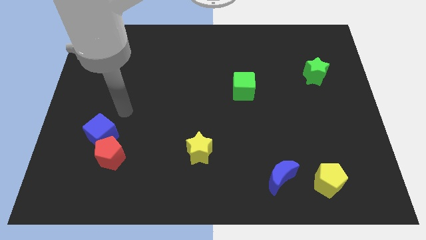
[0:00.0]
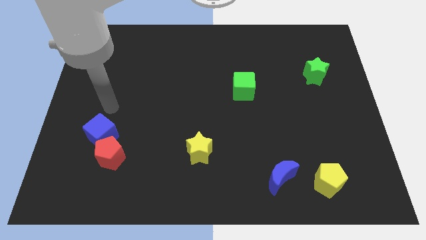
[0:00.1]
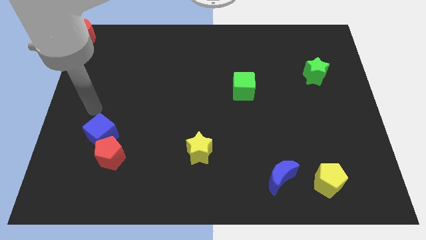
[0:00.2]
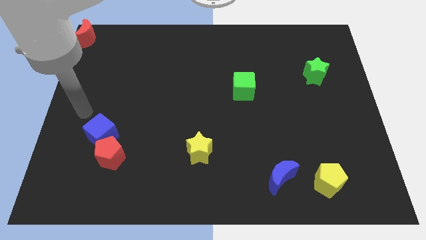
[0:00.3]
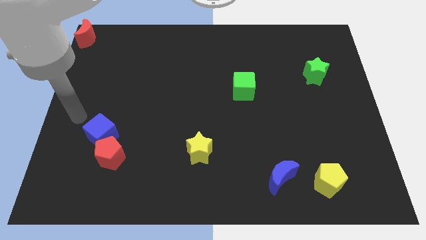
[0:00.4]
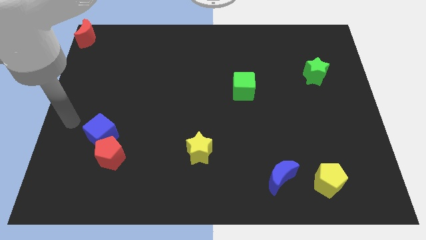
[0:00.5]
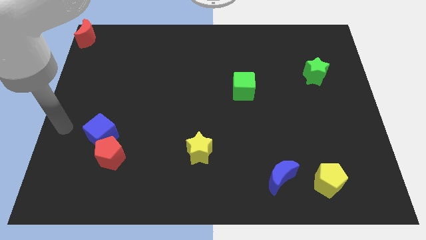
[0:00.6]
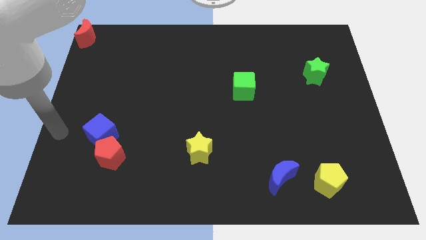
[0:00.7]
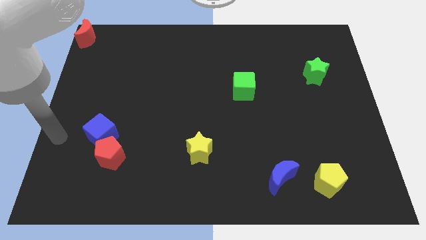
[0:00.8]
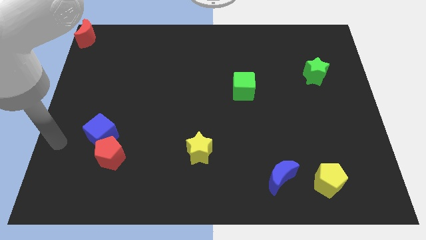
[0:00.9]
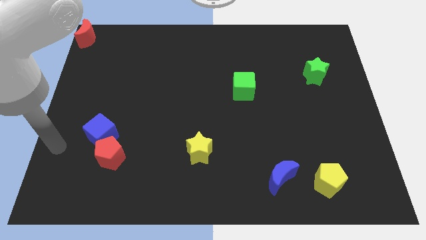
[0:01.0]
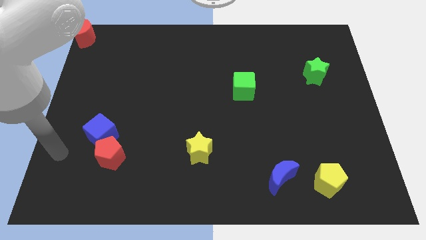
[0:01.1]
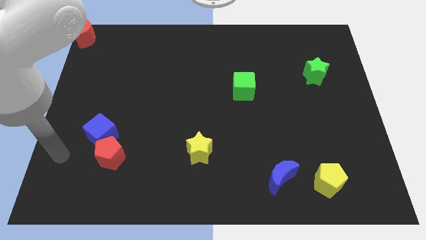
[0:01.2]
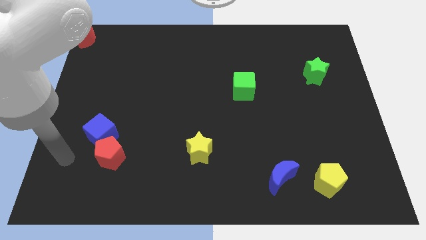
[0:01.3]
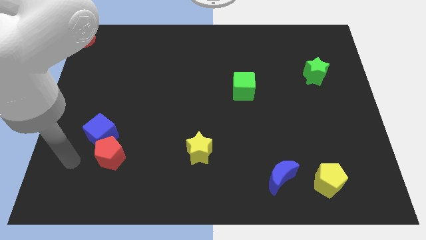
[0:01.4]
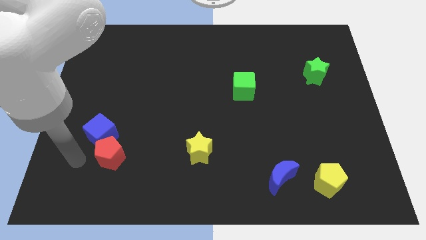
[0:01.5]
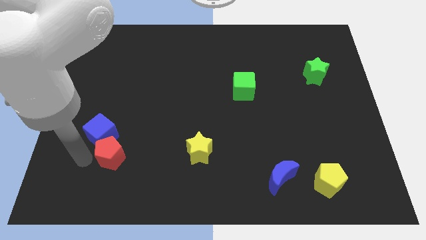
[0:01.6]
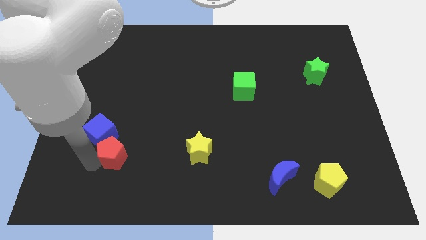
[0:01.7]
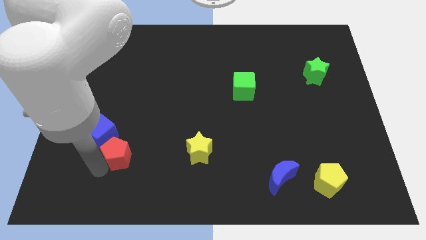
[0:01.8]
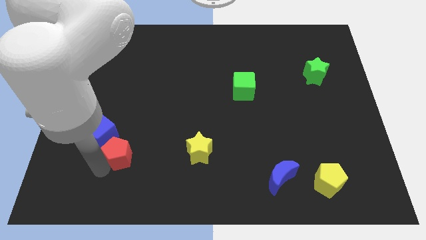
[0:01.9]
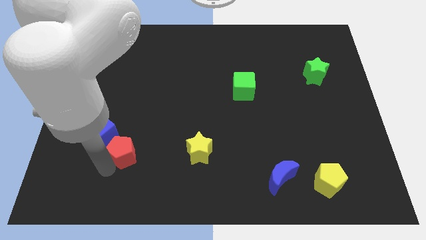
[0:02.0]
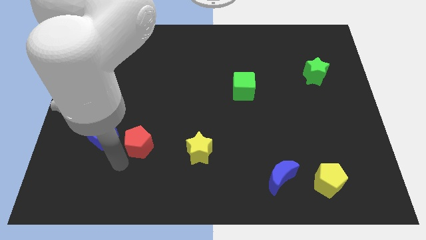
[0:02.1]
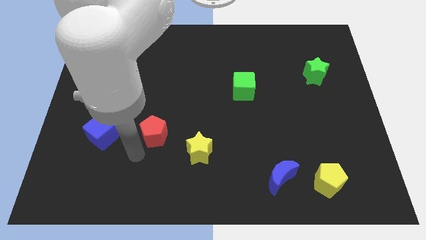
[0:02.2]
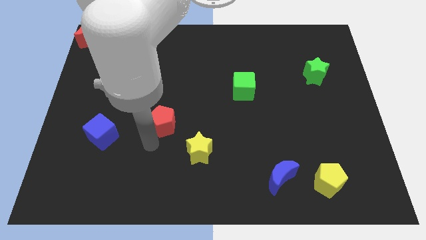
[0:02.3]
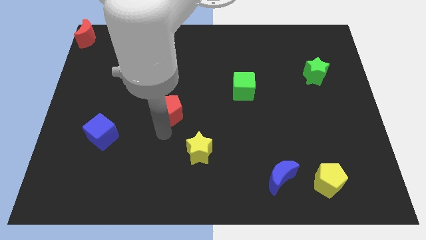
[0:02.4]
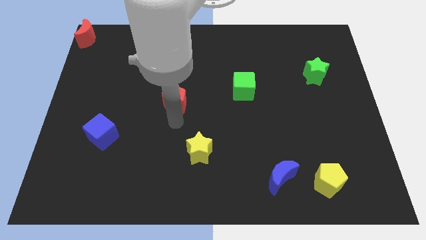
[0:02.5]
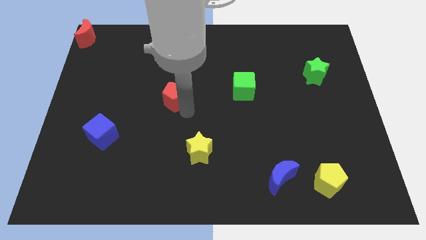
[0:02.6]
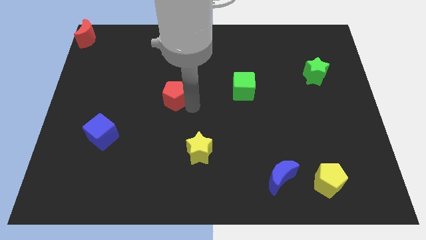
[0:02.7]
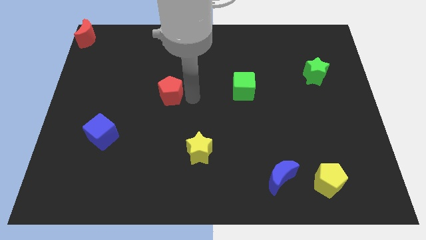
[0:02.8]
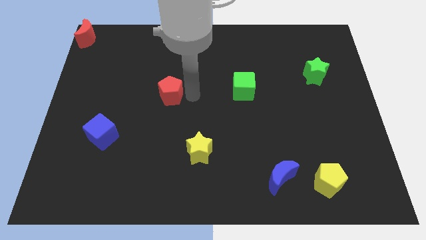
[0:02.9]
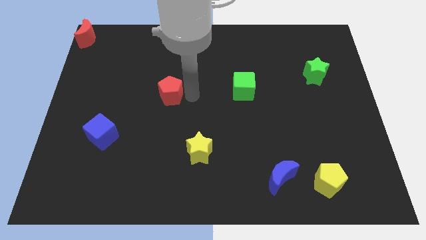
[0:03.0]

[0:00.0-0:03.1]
separate blue cube and red pentagon

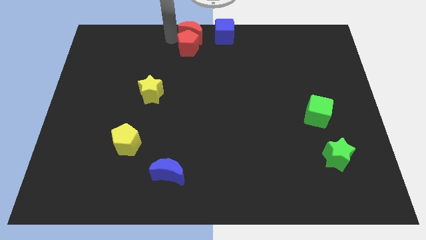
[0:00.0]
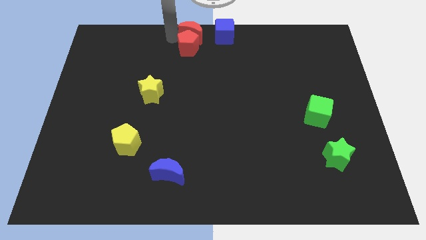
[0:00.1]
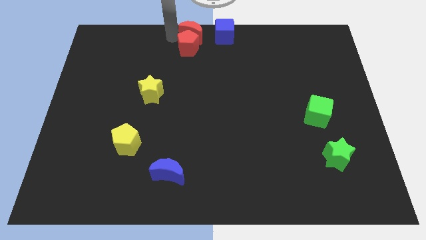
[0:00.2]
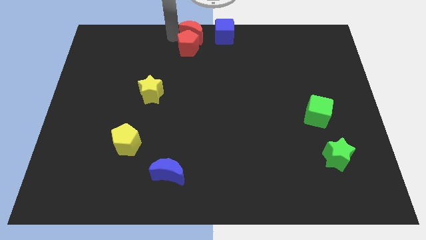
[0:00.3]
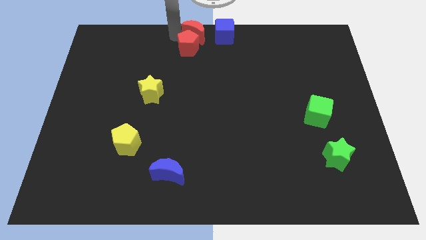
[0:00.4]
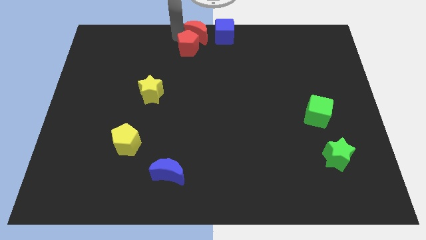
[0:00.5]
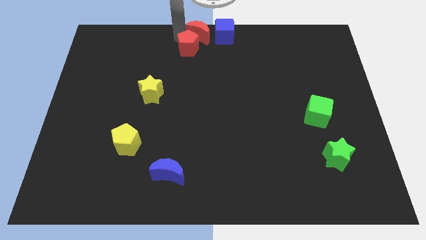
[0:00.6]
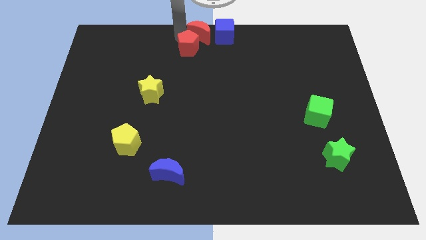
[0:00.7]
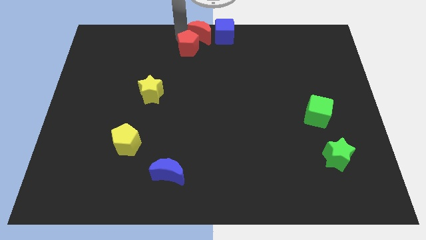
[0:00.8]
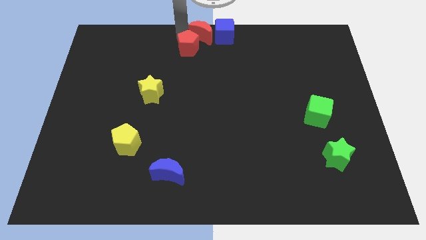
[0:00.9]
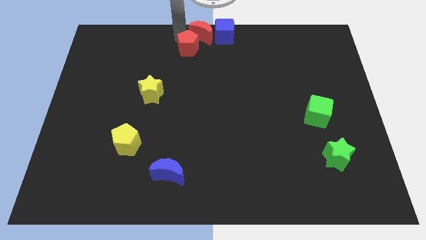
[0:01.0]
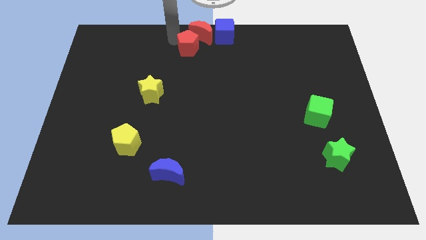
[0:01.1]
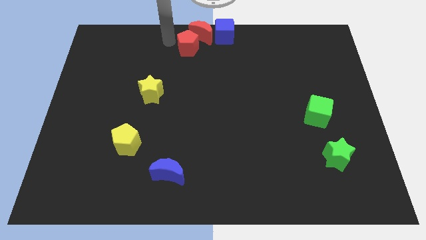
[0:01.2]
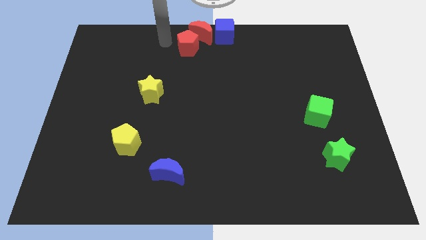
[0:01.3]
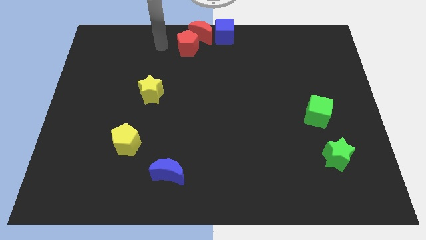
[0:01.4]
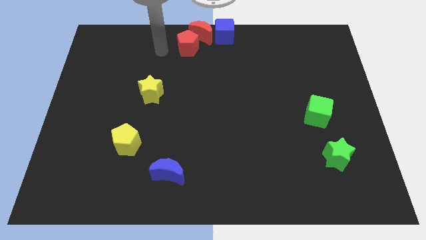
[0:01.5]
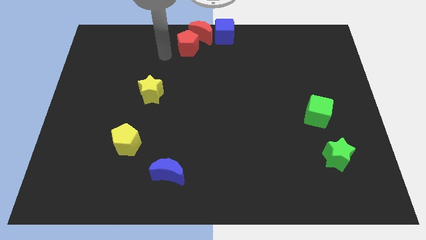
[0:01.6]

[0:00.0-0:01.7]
move red crescent slightly to the right of blue cube

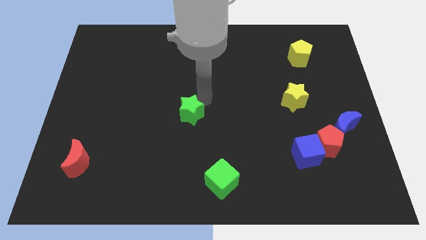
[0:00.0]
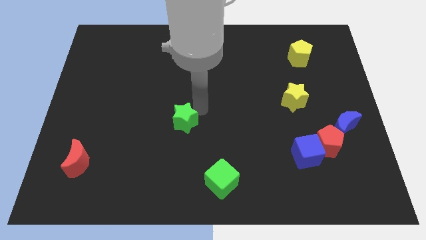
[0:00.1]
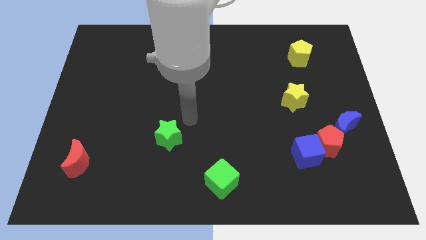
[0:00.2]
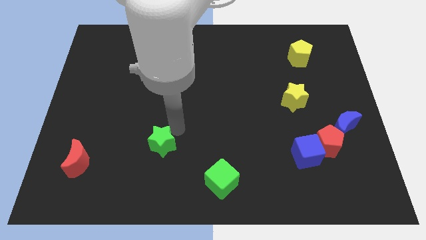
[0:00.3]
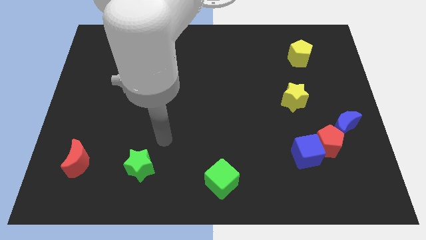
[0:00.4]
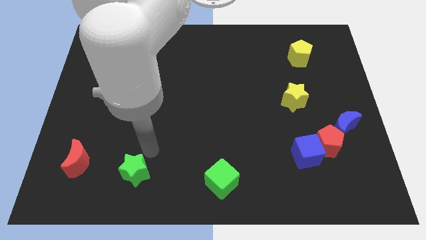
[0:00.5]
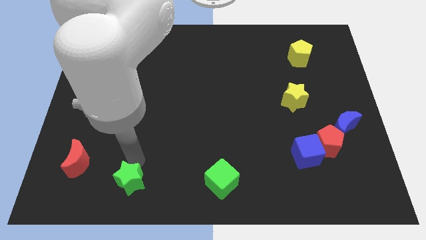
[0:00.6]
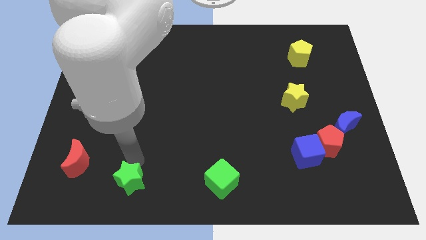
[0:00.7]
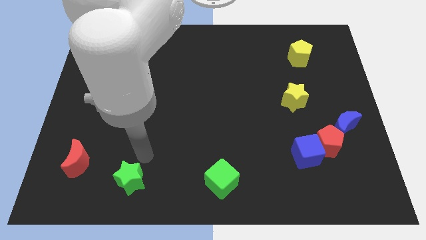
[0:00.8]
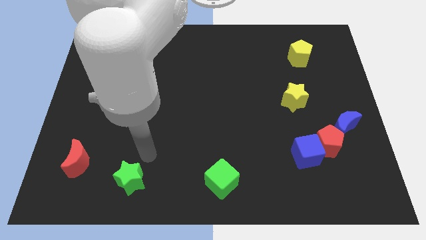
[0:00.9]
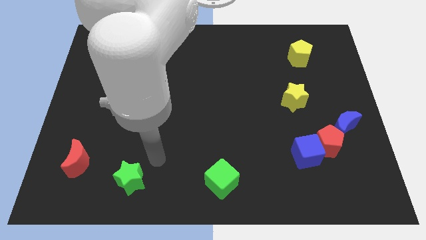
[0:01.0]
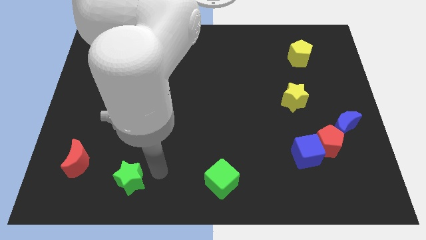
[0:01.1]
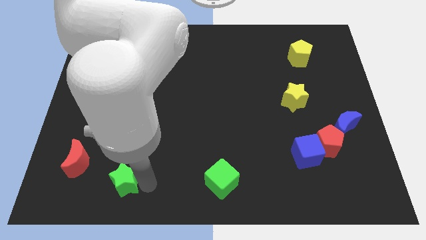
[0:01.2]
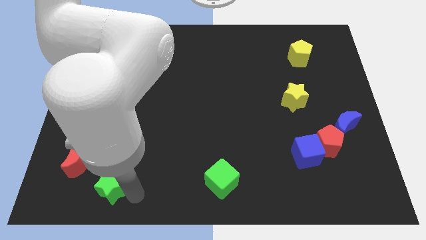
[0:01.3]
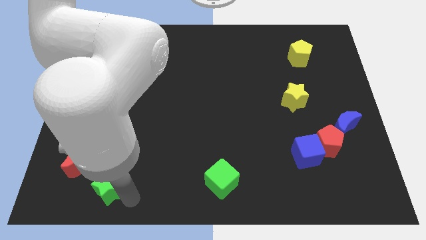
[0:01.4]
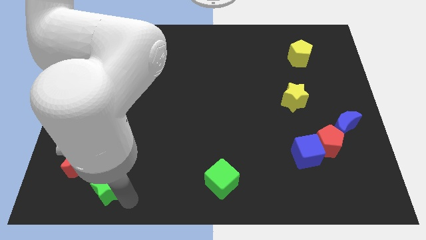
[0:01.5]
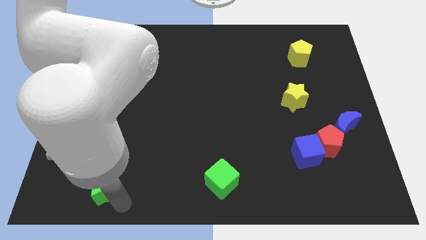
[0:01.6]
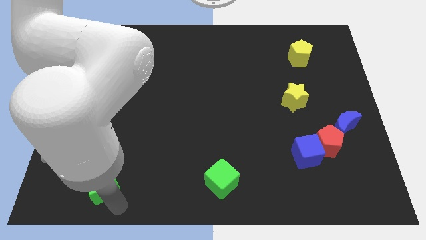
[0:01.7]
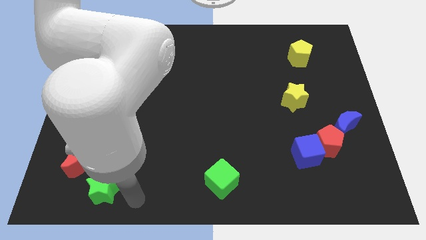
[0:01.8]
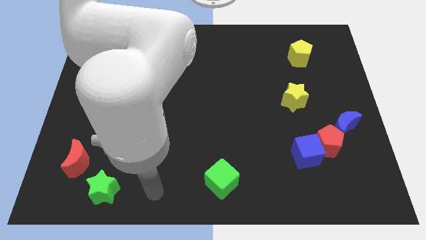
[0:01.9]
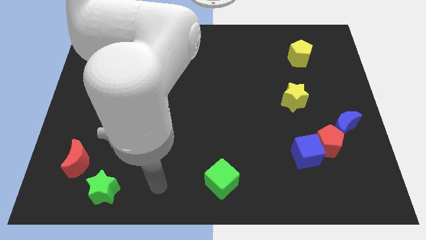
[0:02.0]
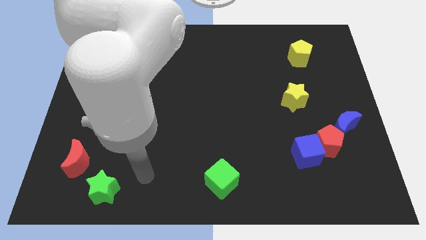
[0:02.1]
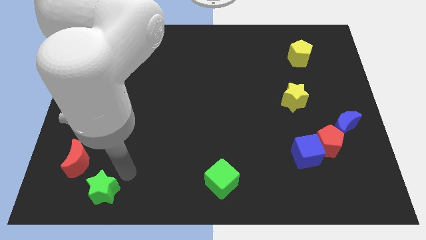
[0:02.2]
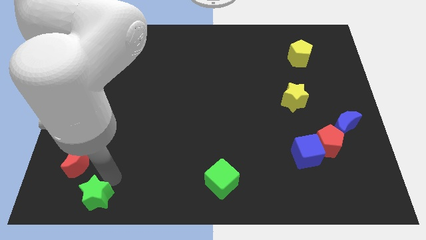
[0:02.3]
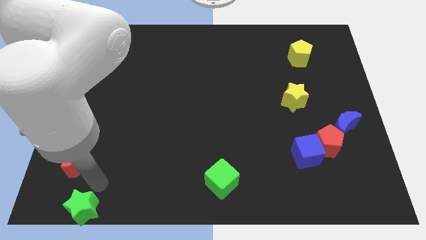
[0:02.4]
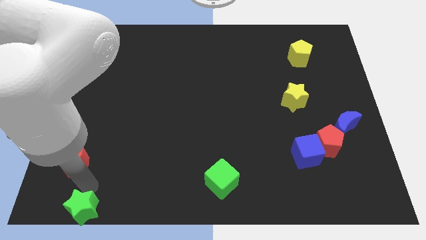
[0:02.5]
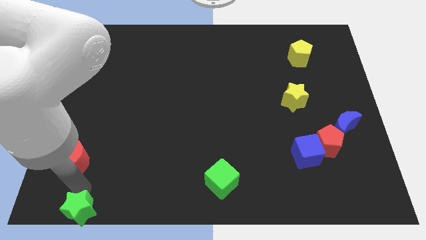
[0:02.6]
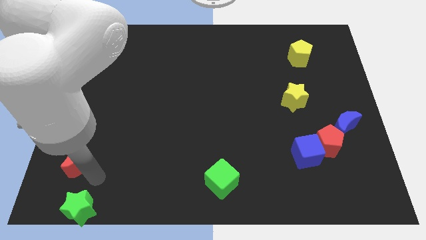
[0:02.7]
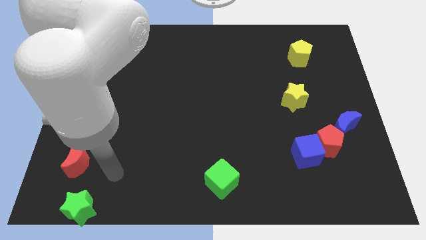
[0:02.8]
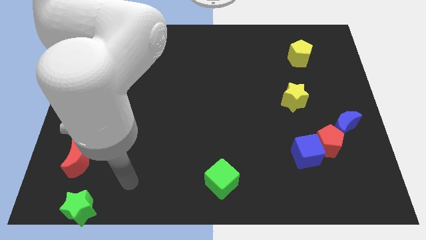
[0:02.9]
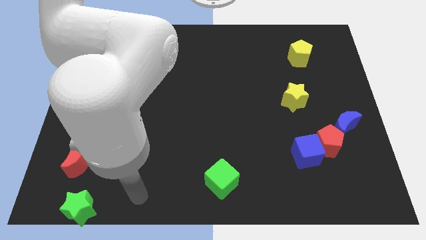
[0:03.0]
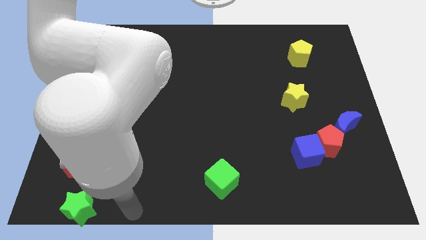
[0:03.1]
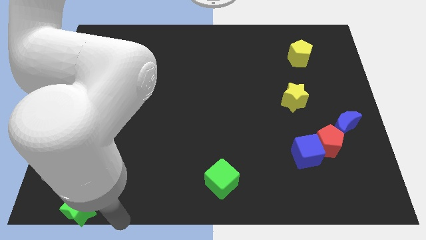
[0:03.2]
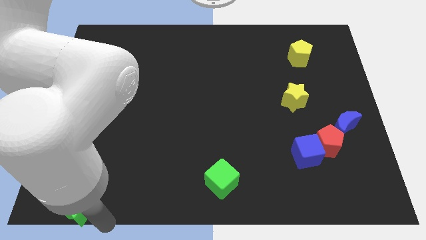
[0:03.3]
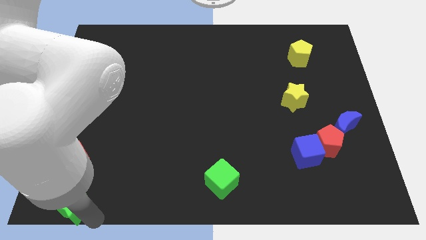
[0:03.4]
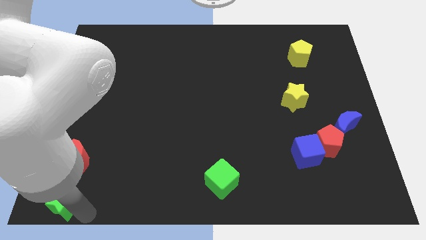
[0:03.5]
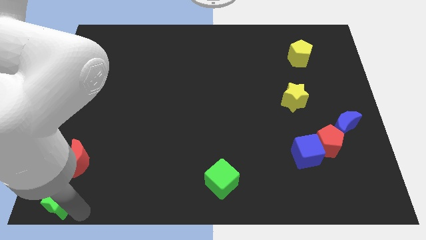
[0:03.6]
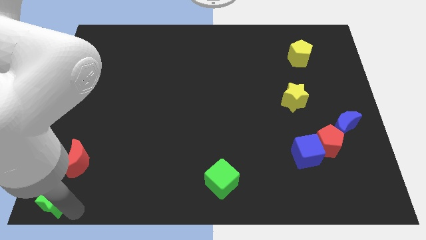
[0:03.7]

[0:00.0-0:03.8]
push the green star to the bottom left side of the board

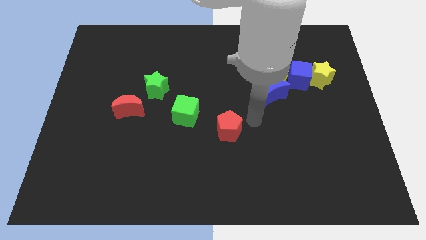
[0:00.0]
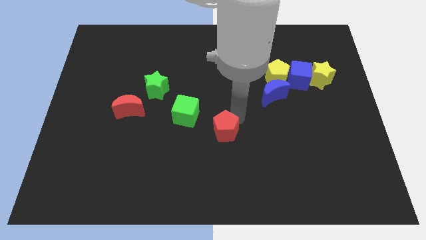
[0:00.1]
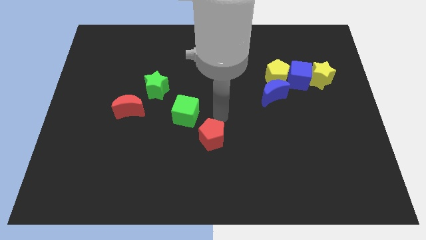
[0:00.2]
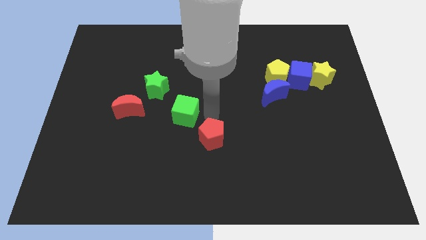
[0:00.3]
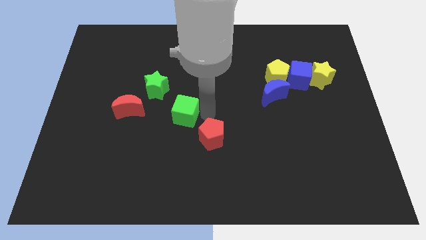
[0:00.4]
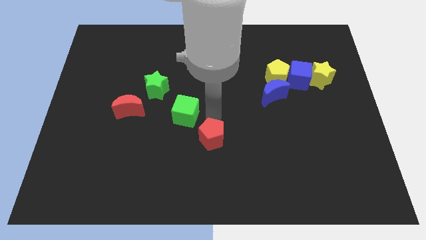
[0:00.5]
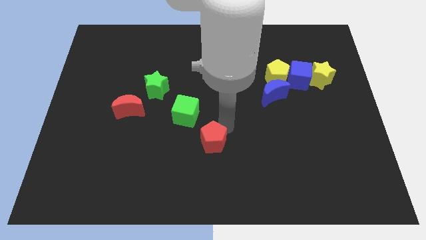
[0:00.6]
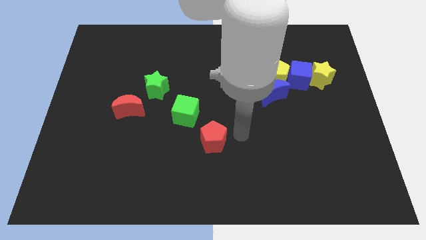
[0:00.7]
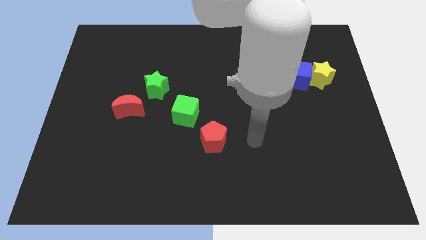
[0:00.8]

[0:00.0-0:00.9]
push the red pentagon parallel to the green cube
